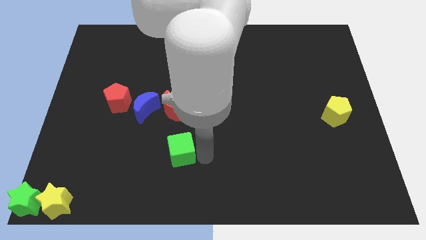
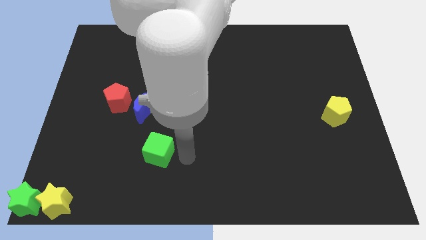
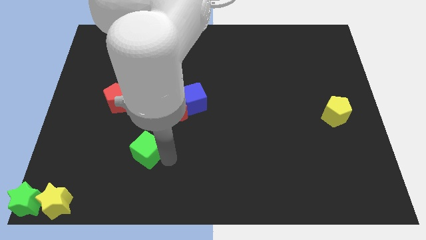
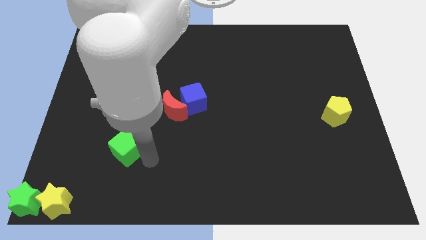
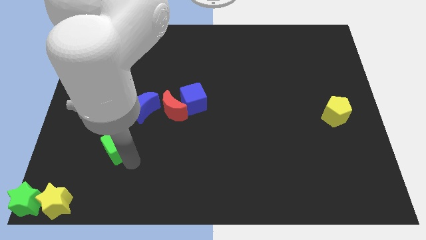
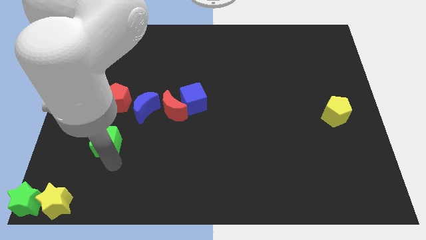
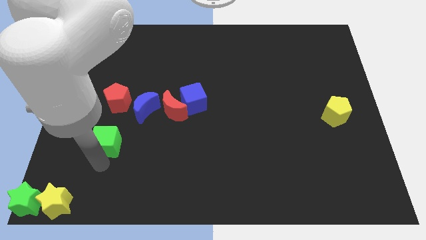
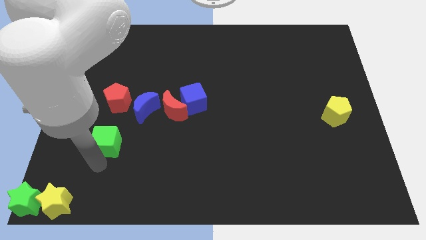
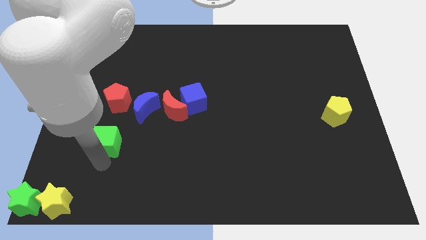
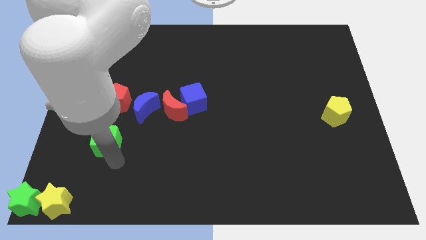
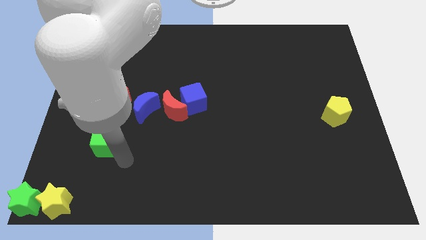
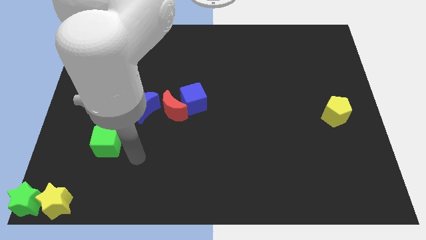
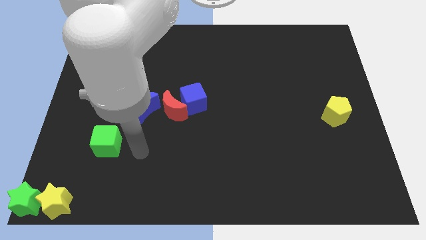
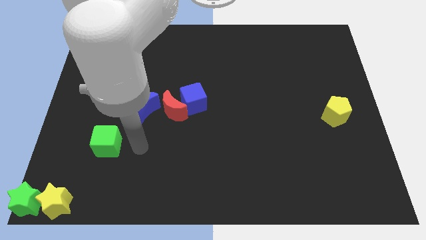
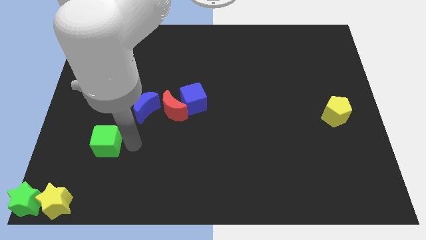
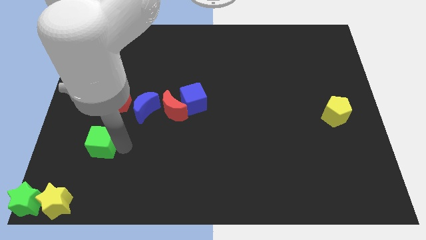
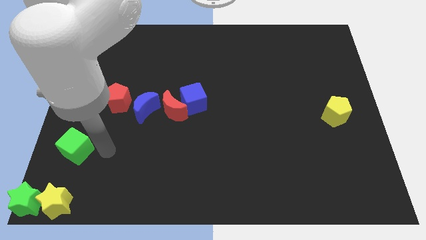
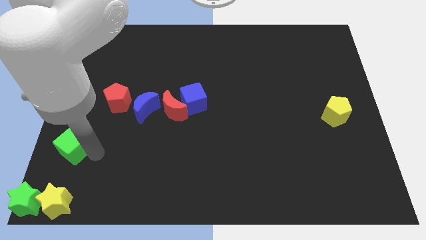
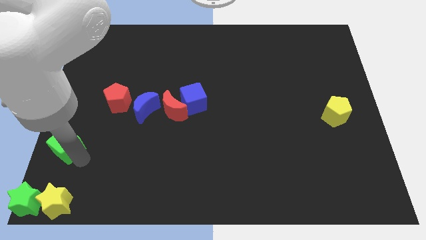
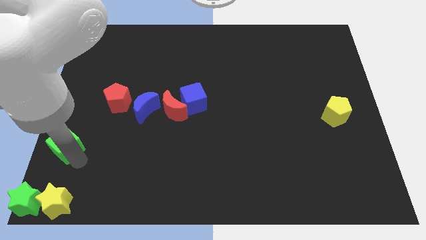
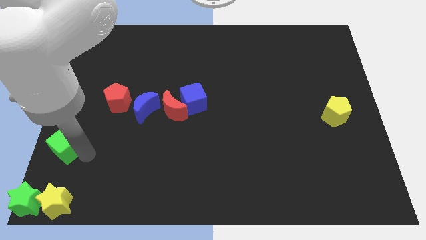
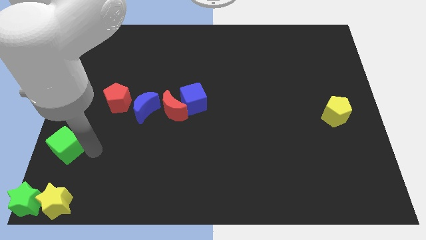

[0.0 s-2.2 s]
place the green cube at the top of the yellow star

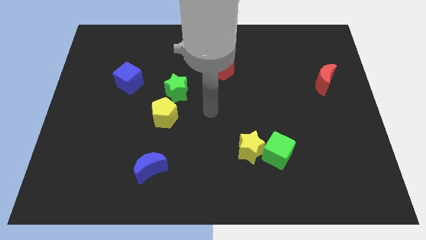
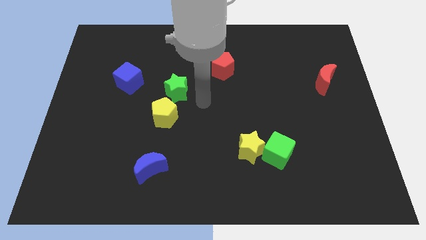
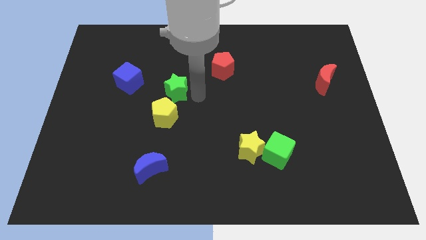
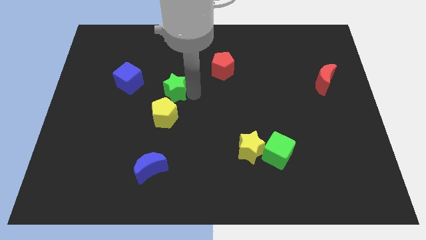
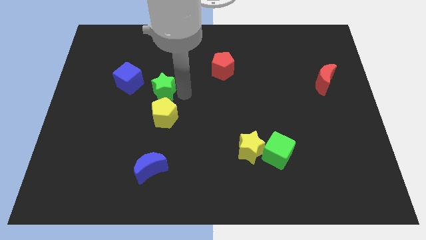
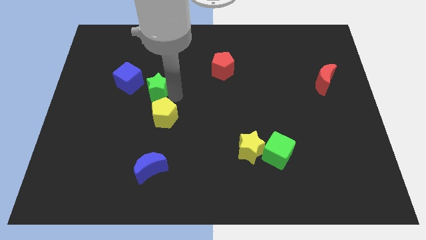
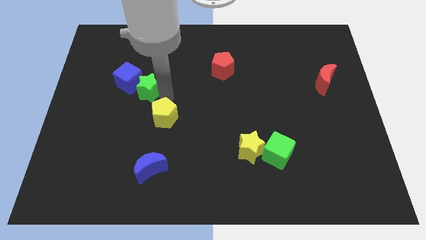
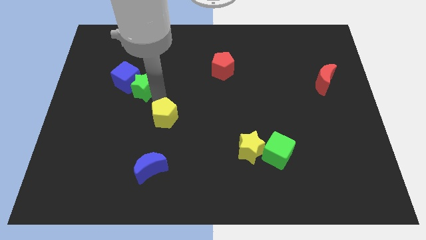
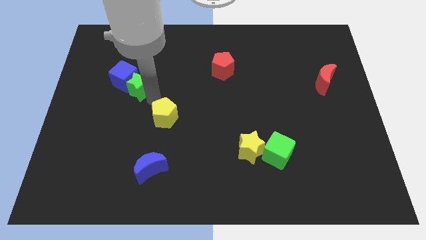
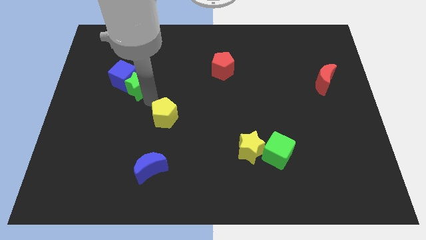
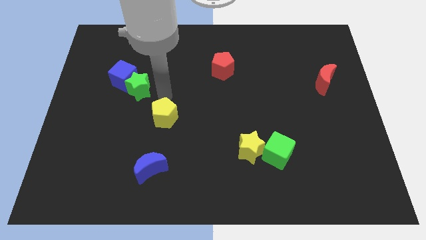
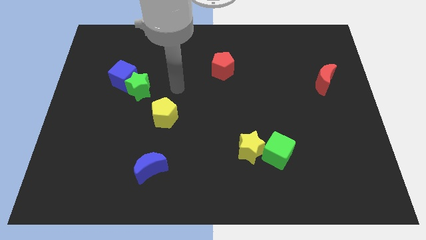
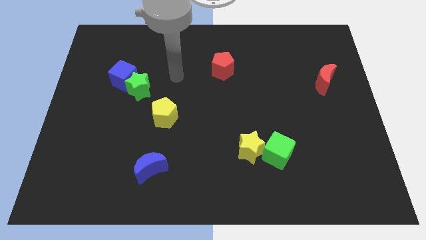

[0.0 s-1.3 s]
push the green star into the blue cube

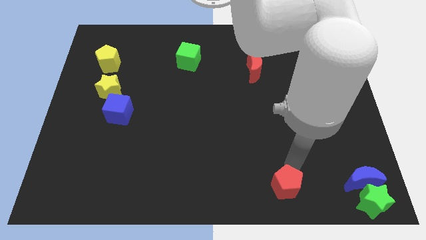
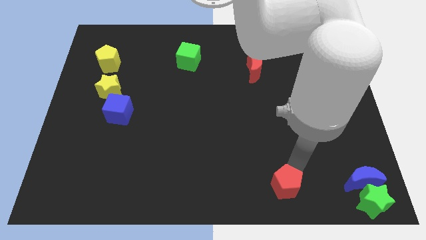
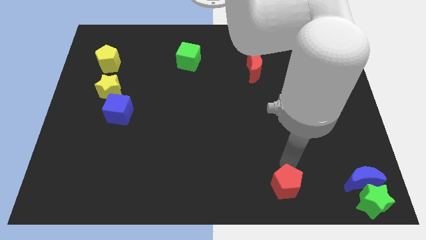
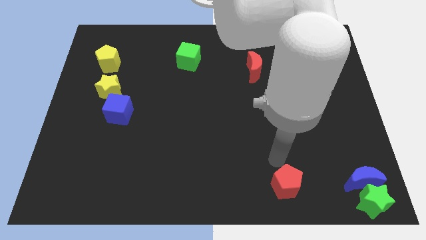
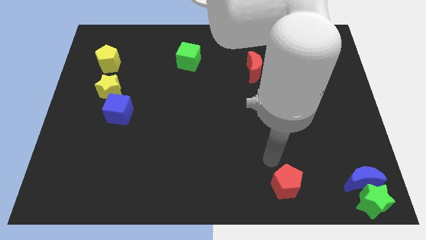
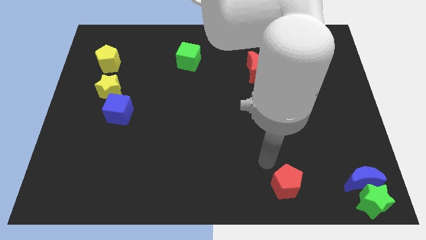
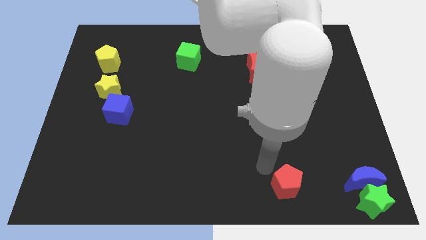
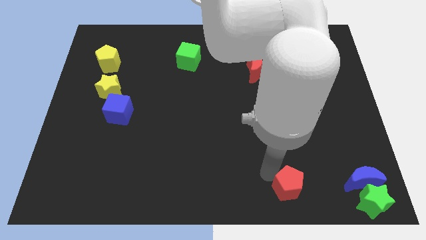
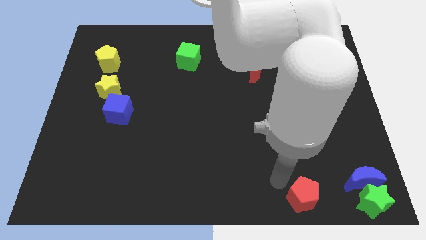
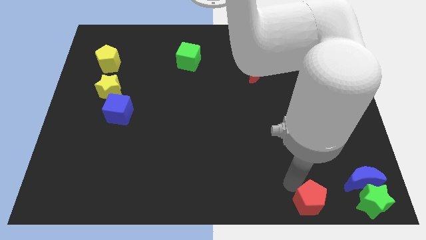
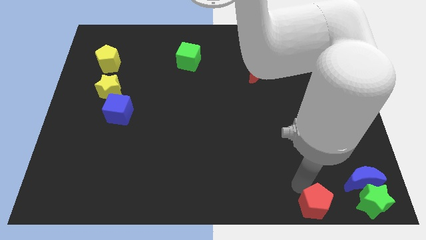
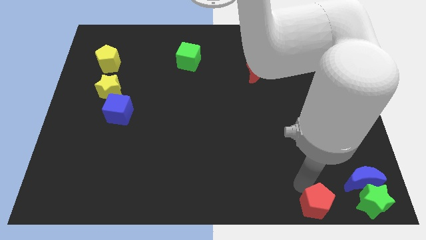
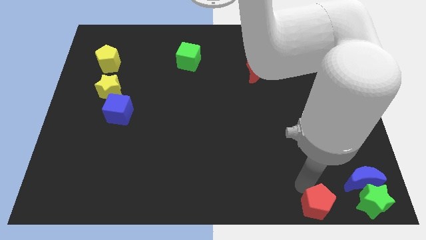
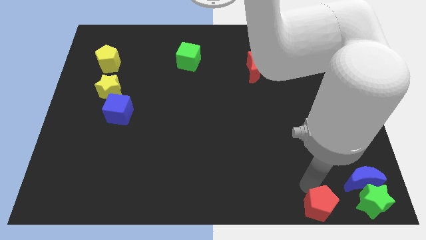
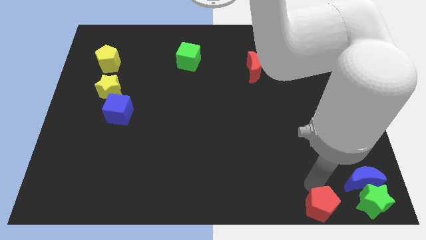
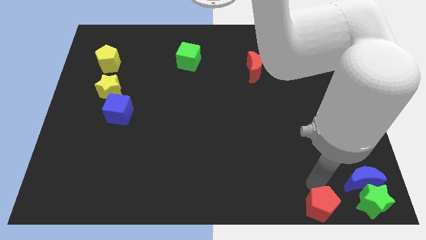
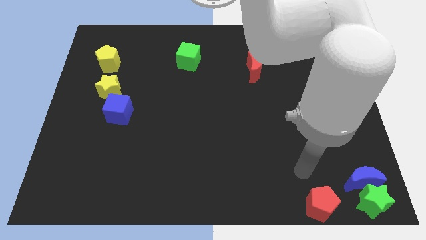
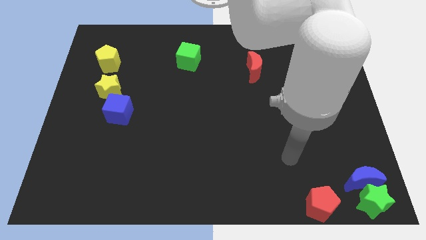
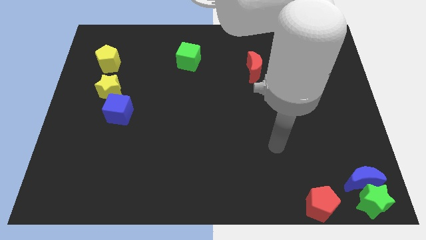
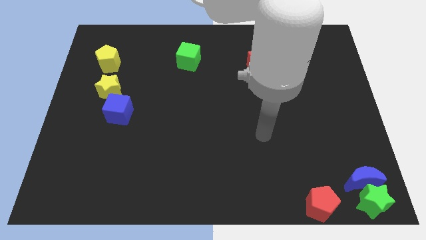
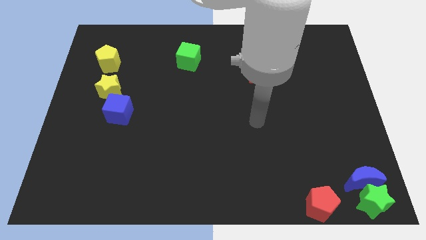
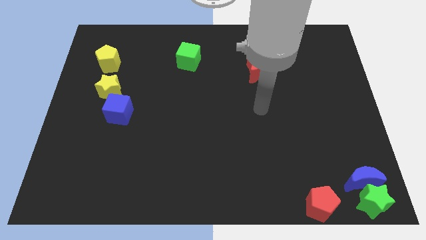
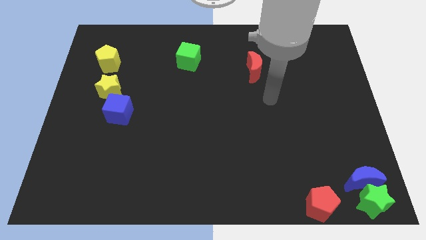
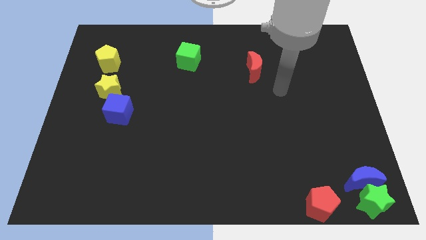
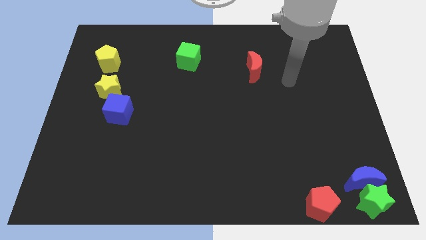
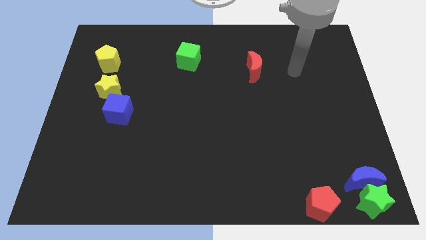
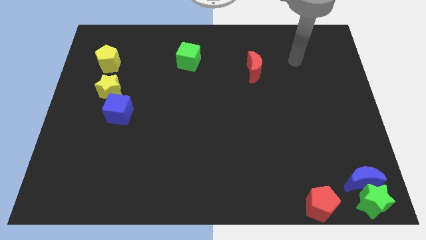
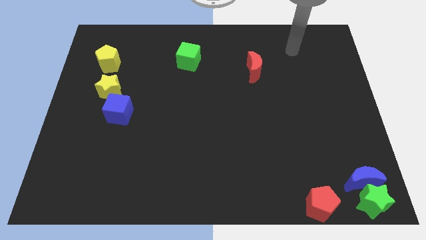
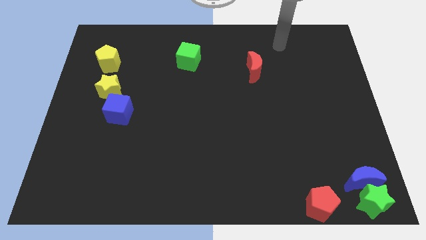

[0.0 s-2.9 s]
place the red moon to the left of green star

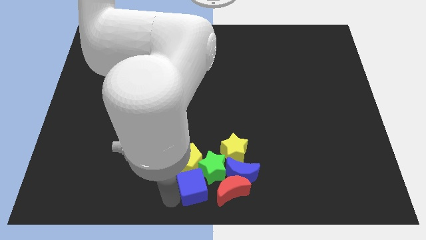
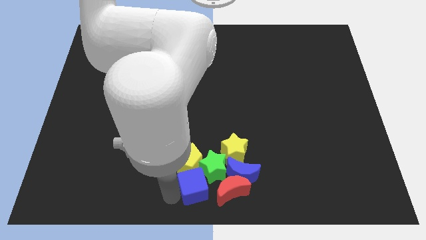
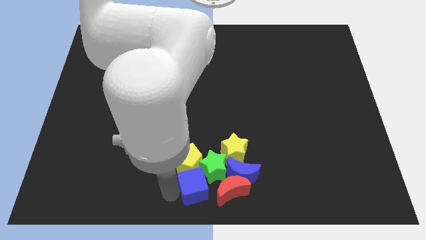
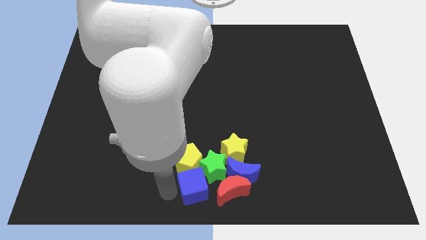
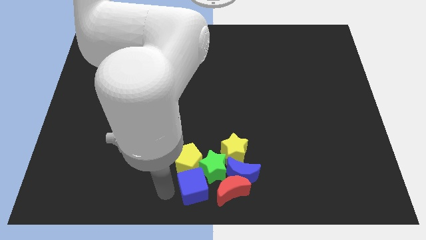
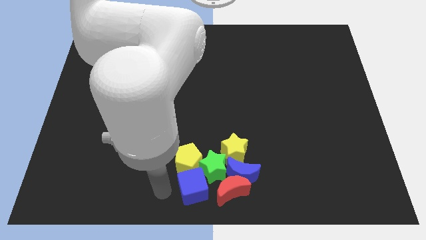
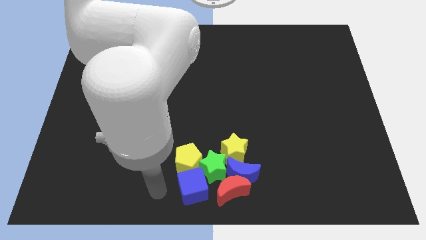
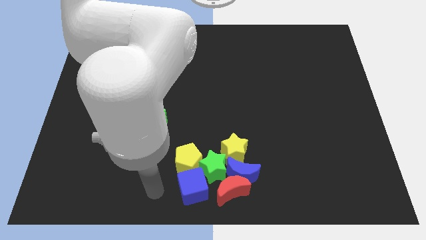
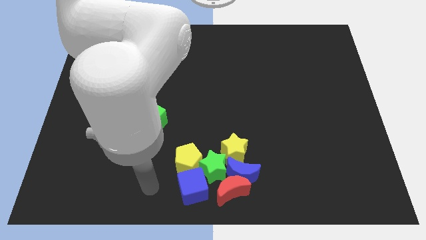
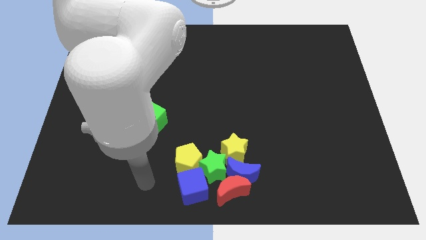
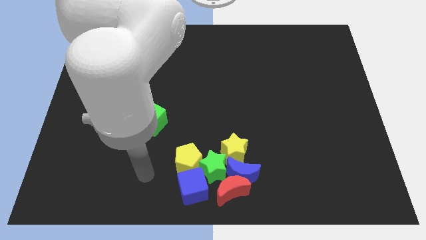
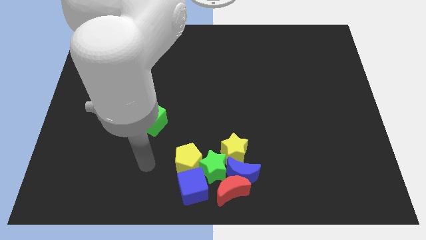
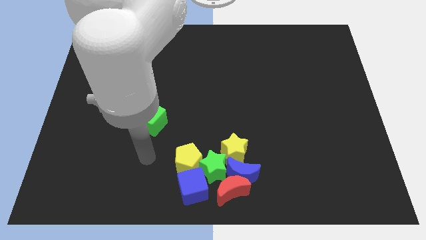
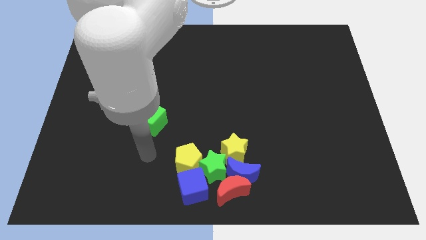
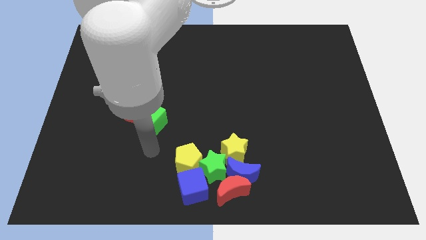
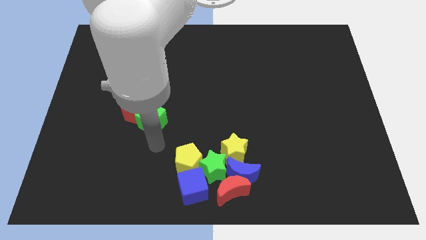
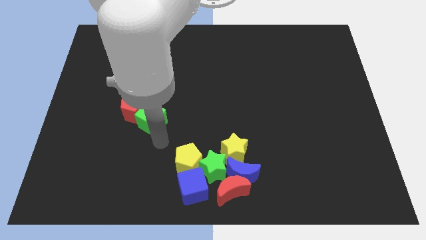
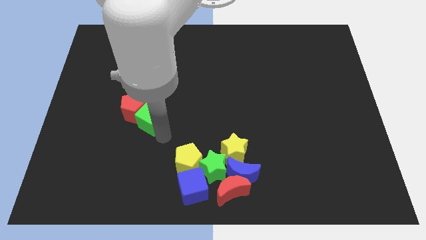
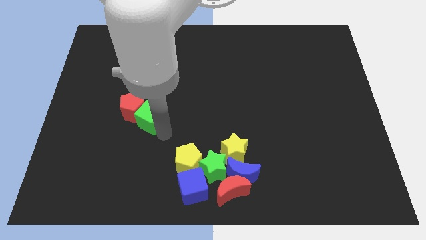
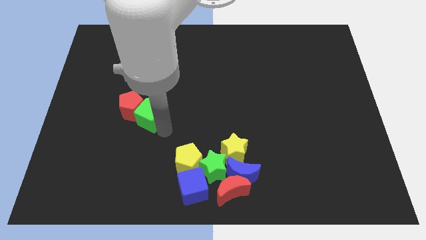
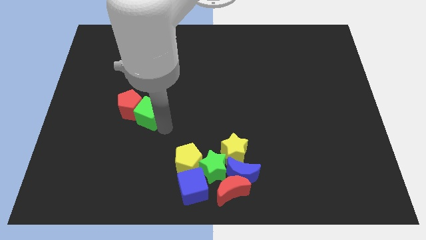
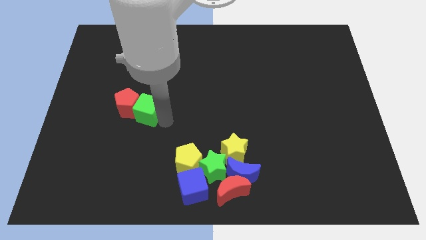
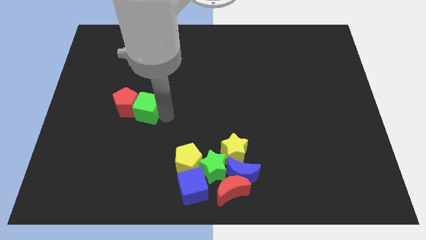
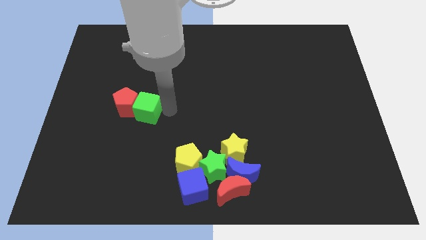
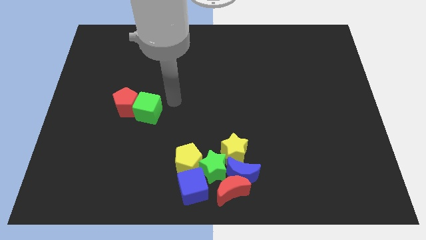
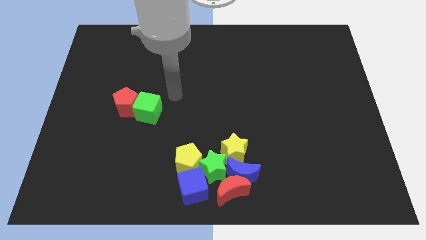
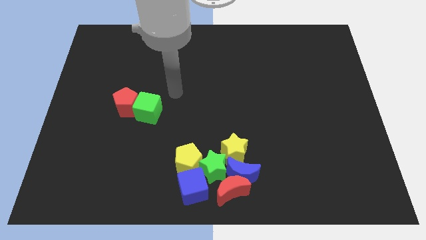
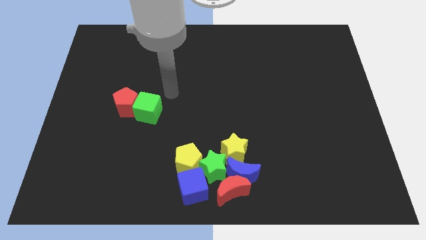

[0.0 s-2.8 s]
slightly move the green cube upwards
